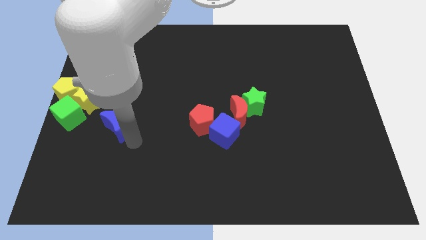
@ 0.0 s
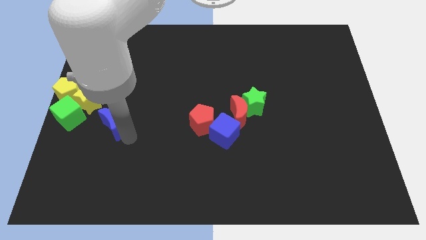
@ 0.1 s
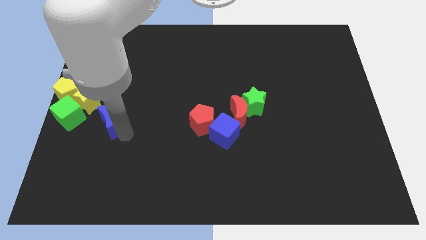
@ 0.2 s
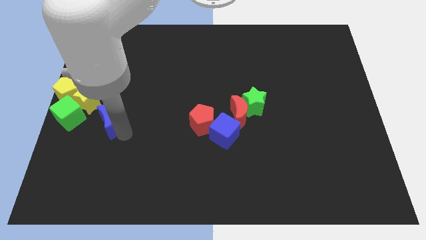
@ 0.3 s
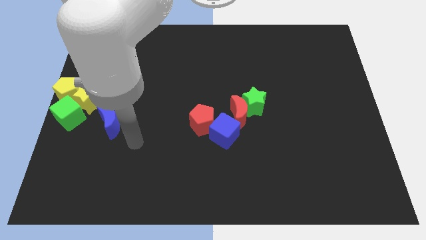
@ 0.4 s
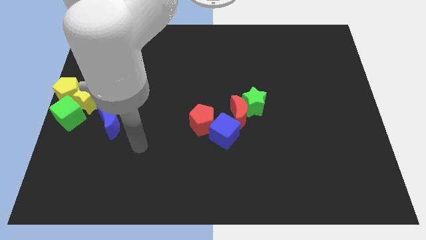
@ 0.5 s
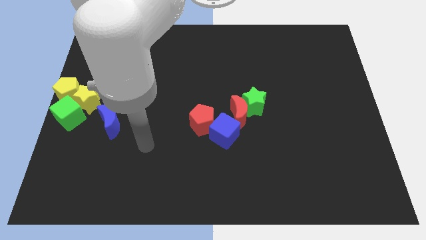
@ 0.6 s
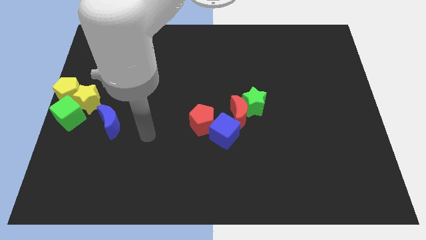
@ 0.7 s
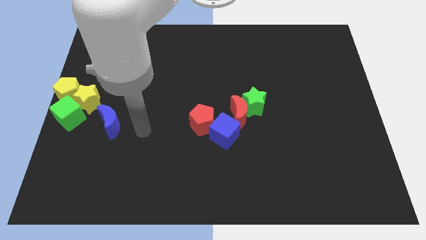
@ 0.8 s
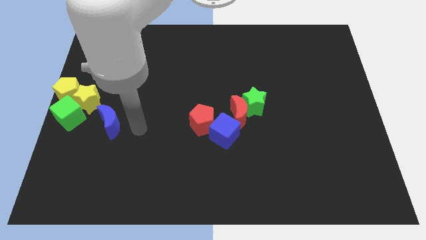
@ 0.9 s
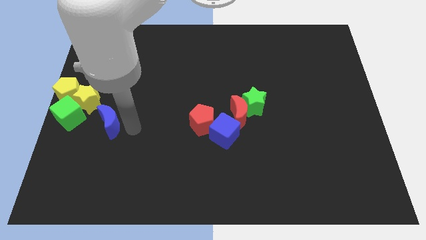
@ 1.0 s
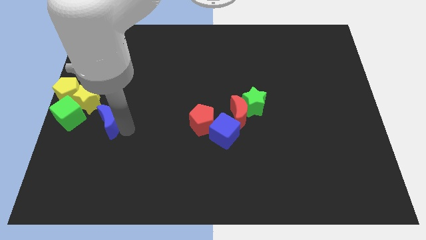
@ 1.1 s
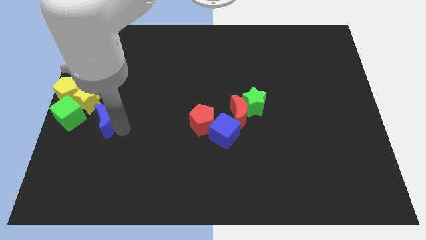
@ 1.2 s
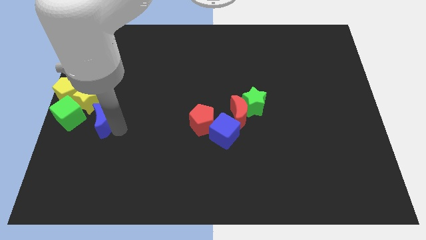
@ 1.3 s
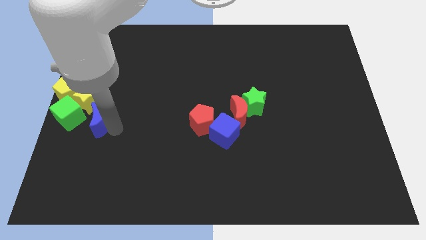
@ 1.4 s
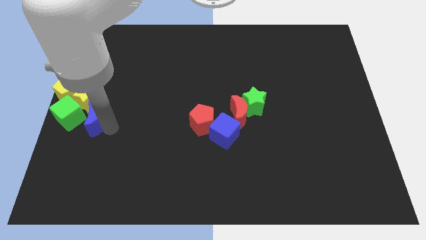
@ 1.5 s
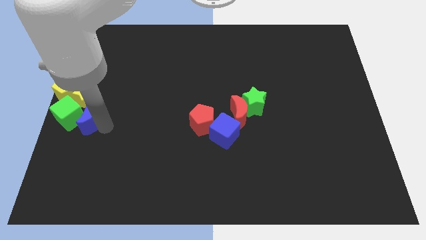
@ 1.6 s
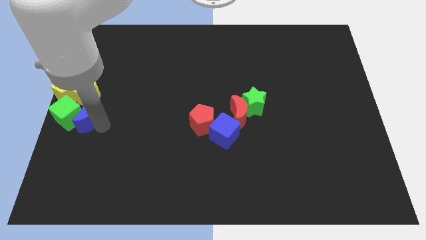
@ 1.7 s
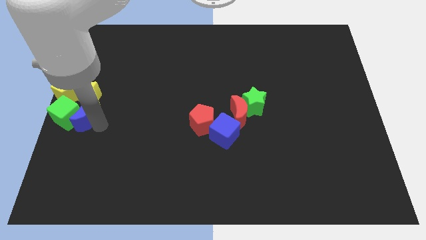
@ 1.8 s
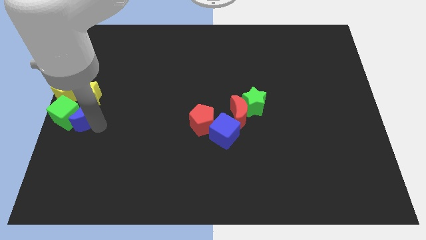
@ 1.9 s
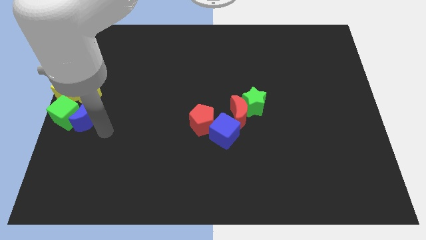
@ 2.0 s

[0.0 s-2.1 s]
push the blue moon into the group of blocks

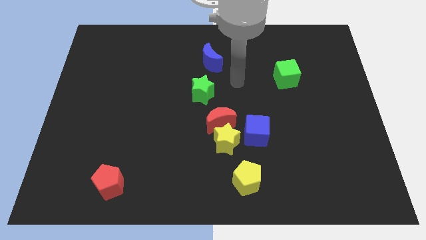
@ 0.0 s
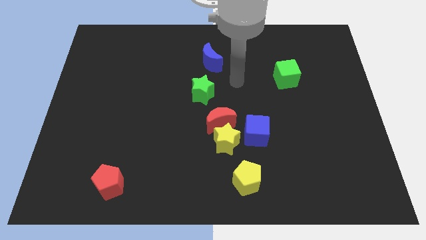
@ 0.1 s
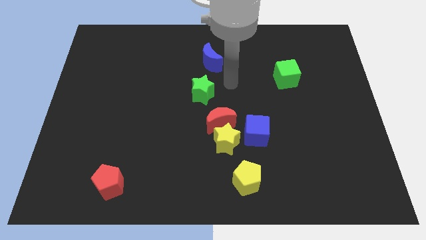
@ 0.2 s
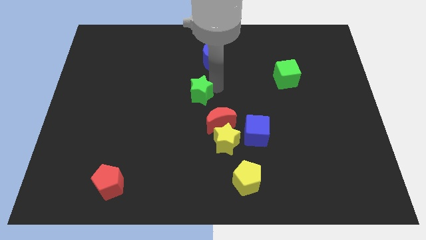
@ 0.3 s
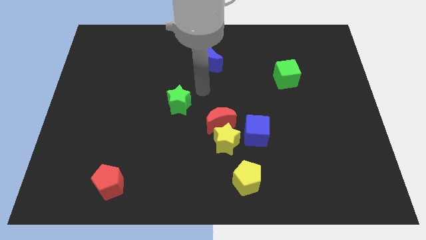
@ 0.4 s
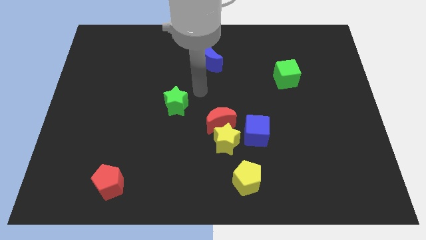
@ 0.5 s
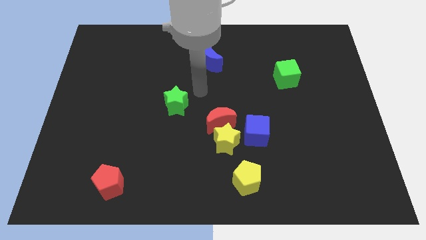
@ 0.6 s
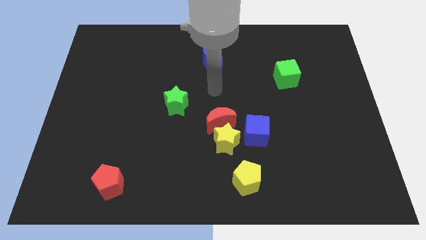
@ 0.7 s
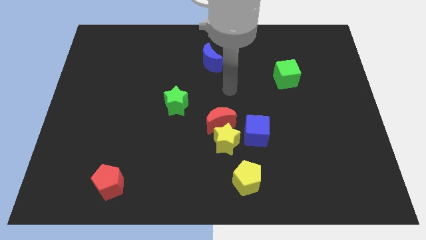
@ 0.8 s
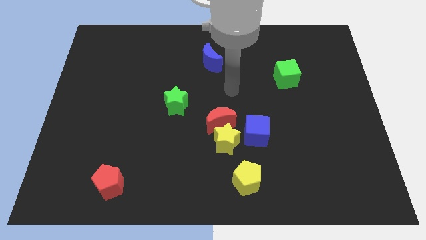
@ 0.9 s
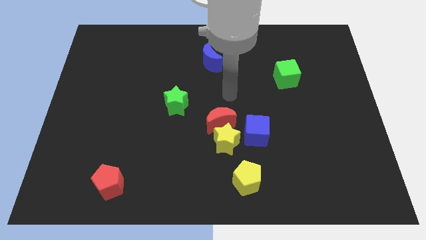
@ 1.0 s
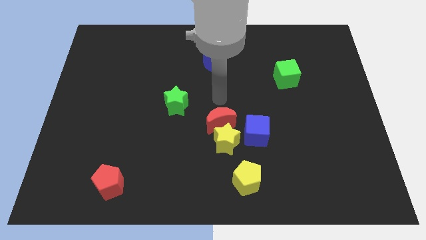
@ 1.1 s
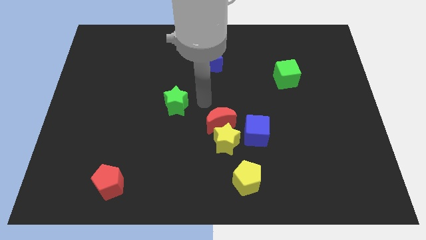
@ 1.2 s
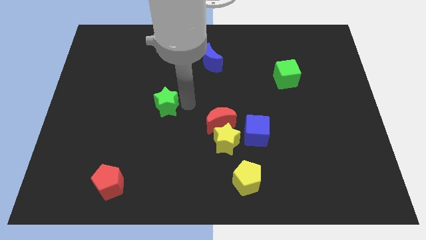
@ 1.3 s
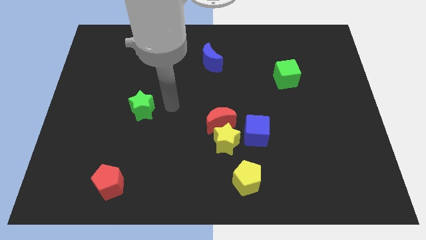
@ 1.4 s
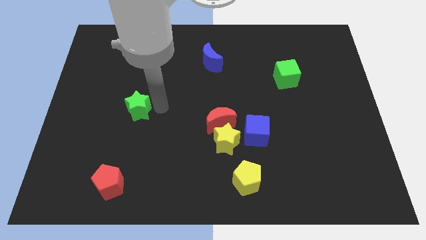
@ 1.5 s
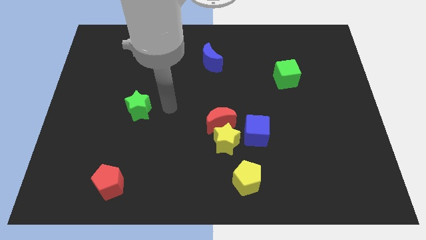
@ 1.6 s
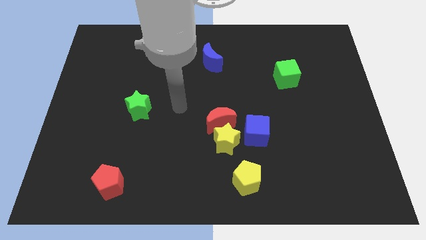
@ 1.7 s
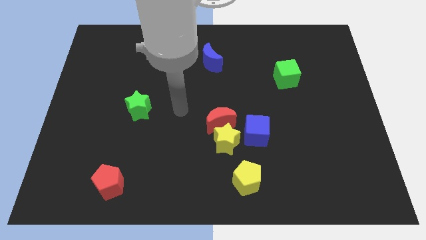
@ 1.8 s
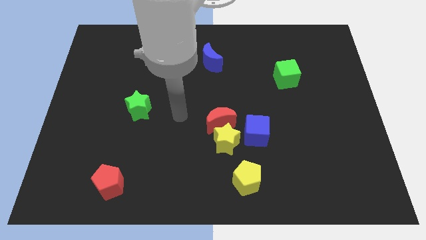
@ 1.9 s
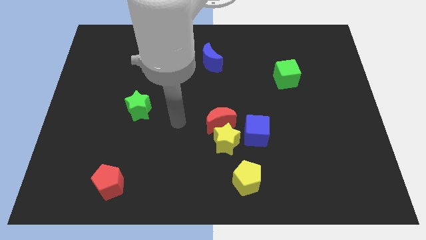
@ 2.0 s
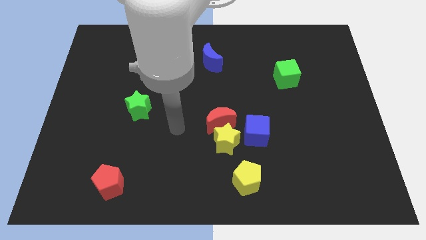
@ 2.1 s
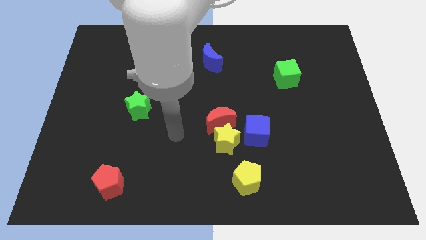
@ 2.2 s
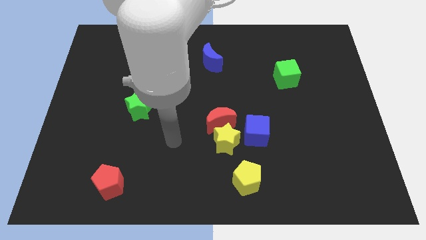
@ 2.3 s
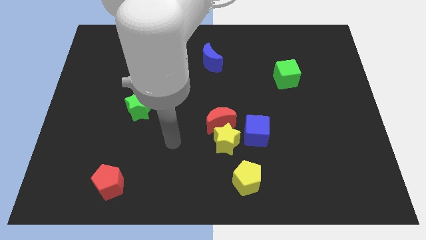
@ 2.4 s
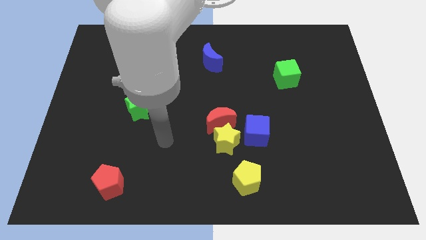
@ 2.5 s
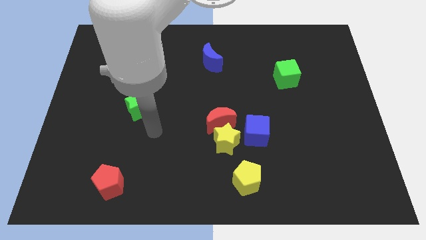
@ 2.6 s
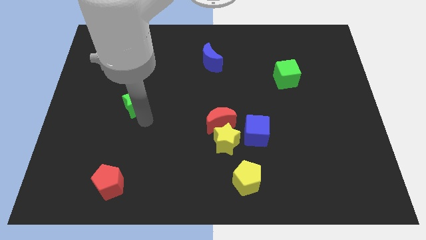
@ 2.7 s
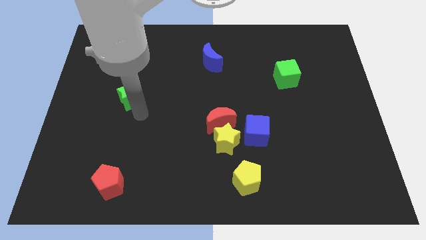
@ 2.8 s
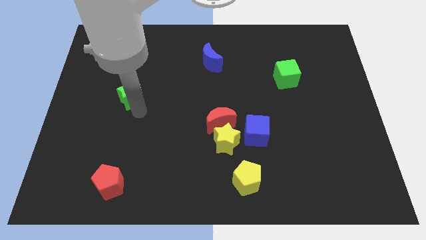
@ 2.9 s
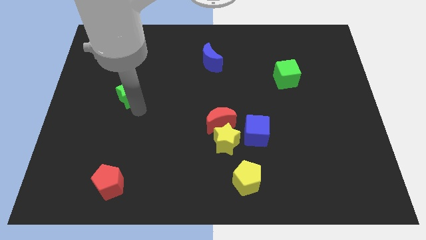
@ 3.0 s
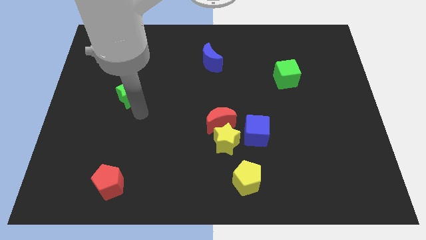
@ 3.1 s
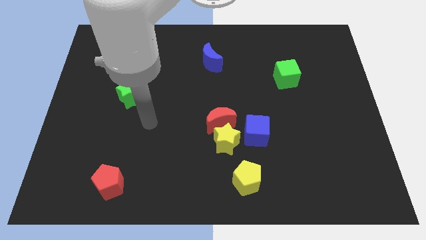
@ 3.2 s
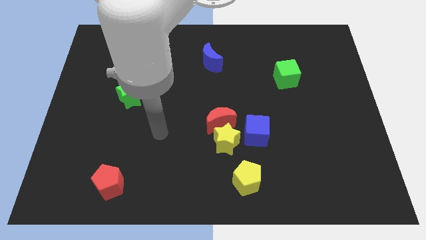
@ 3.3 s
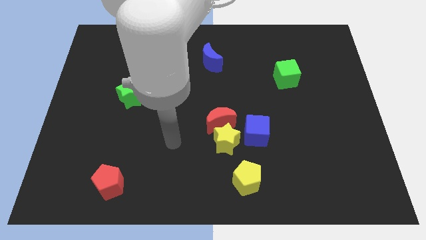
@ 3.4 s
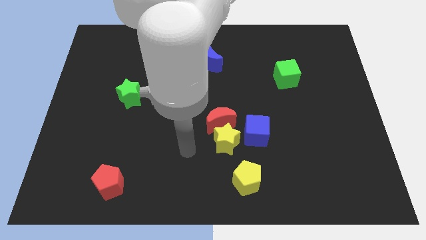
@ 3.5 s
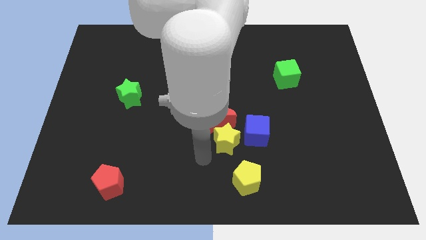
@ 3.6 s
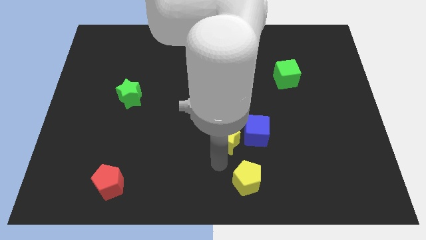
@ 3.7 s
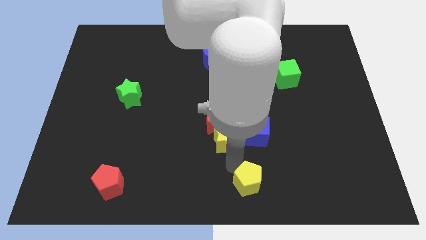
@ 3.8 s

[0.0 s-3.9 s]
move the green star parallel to the red pentagon

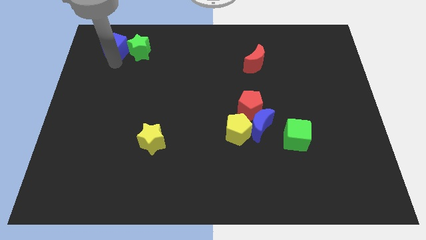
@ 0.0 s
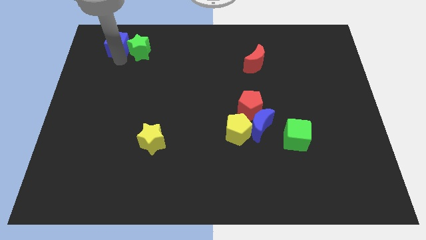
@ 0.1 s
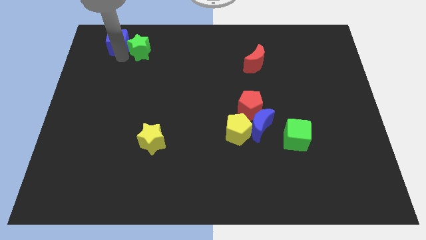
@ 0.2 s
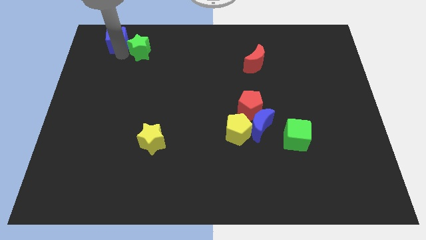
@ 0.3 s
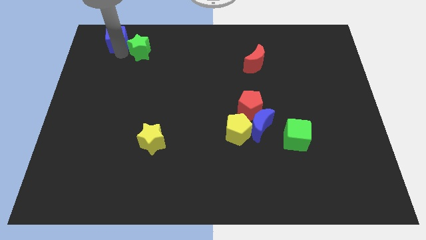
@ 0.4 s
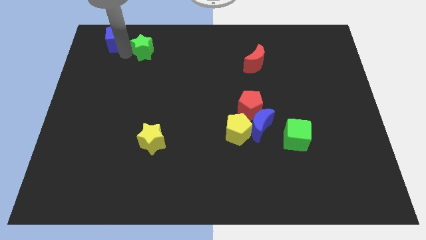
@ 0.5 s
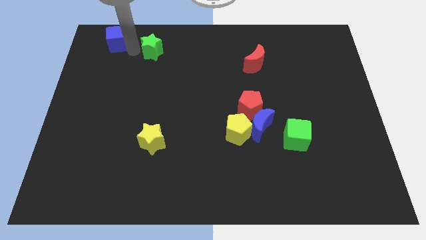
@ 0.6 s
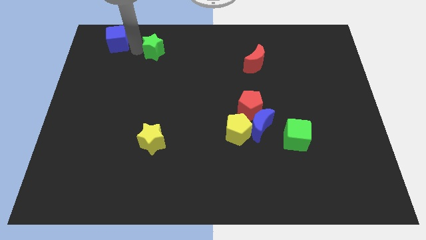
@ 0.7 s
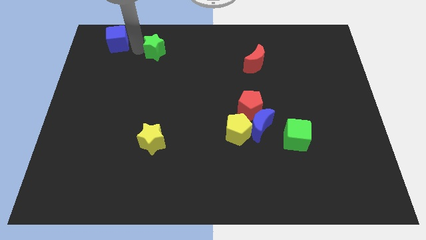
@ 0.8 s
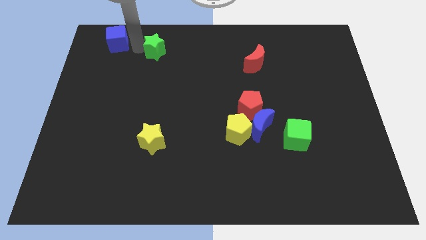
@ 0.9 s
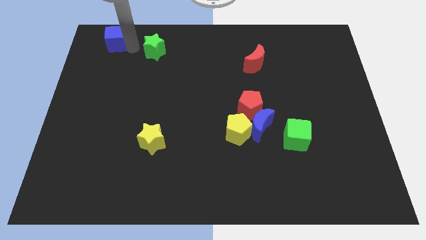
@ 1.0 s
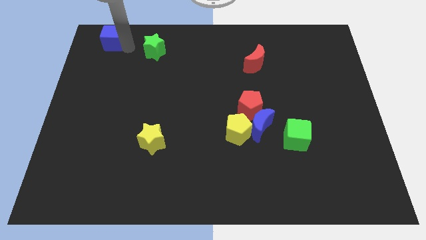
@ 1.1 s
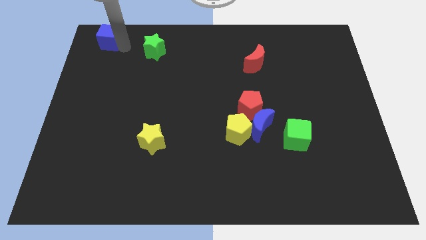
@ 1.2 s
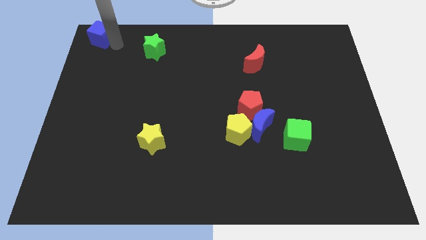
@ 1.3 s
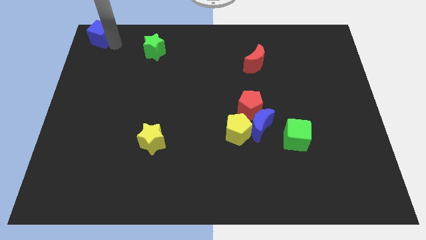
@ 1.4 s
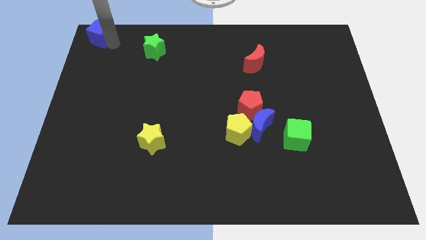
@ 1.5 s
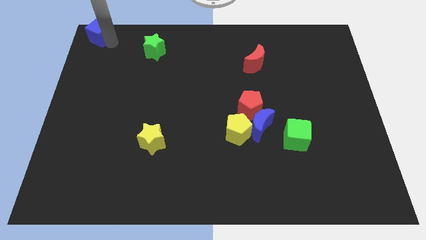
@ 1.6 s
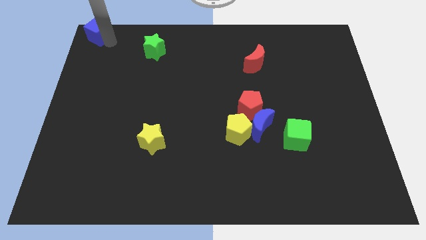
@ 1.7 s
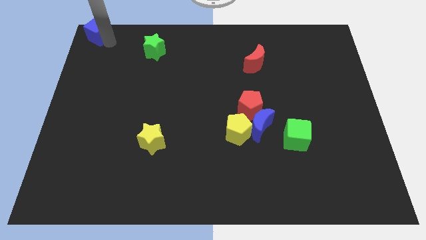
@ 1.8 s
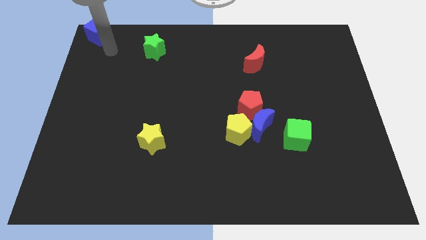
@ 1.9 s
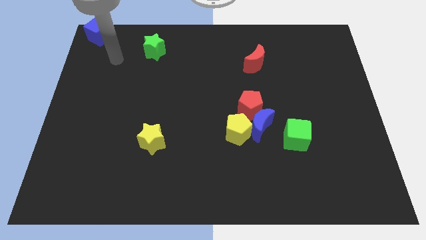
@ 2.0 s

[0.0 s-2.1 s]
move the blue cube to the top left corner of the board

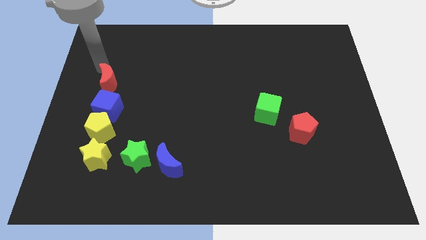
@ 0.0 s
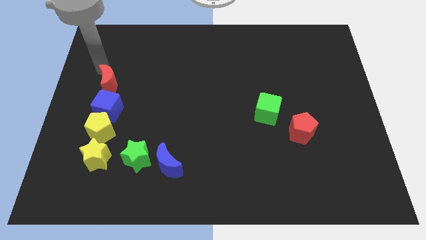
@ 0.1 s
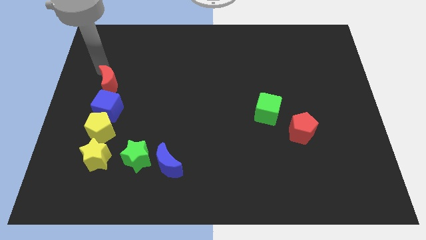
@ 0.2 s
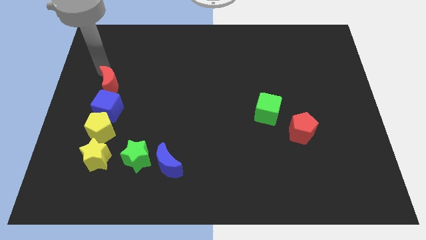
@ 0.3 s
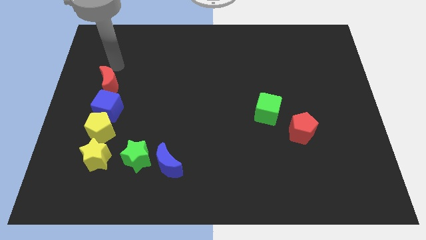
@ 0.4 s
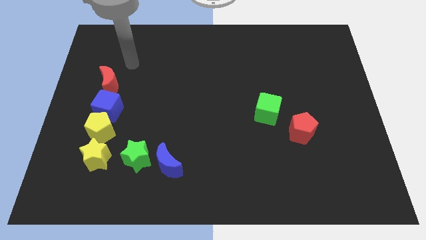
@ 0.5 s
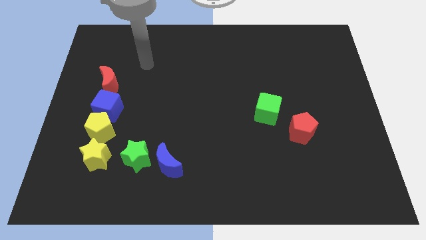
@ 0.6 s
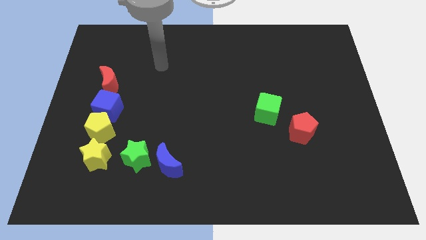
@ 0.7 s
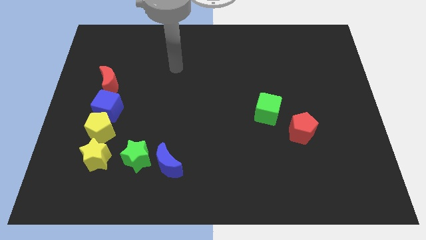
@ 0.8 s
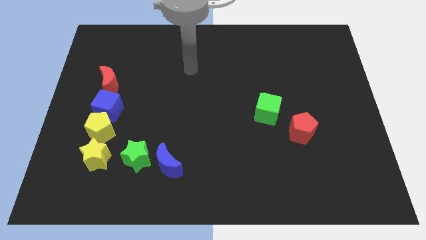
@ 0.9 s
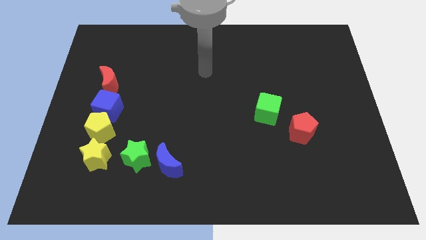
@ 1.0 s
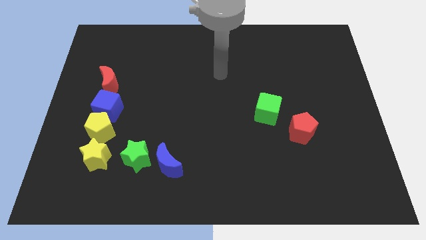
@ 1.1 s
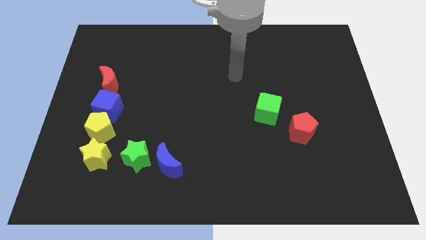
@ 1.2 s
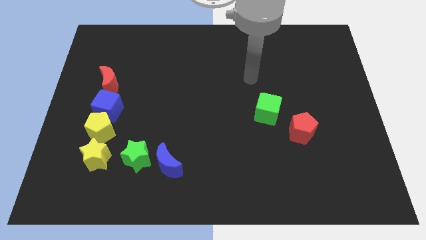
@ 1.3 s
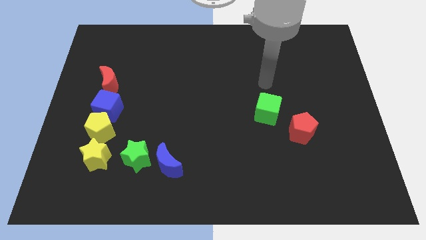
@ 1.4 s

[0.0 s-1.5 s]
move arm away from red crescent
